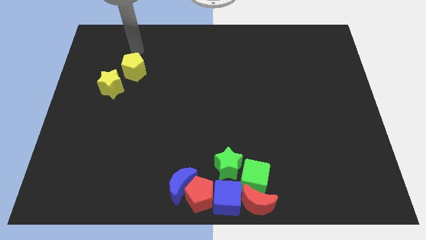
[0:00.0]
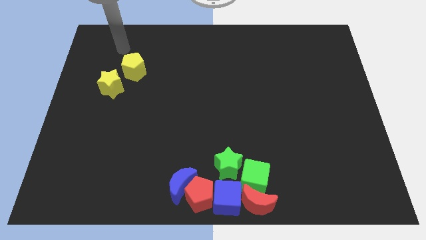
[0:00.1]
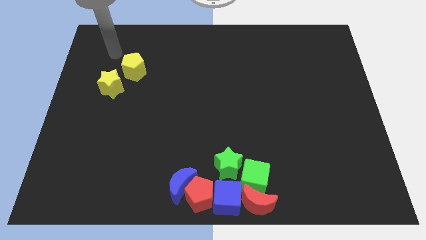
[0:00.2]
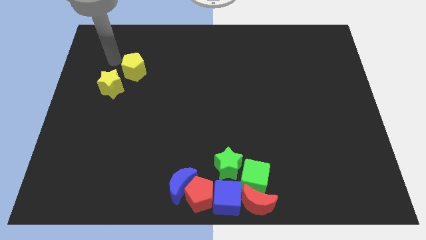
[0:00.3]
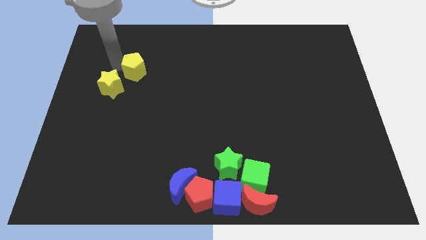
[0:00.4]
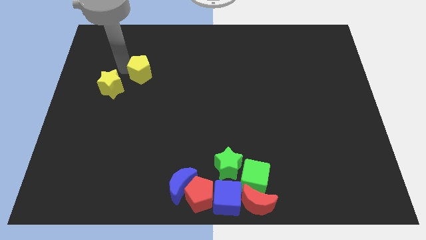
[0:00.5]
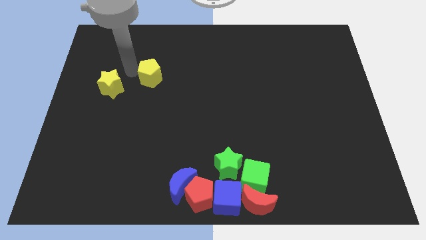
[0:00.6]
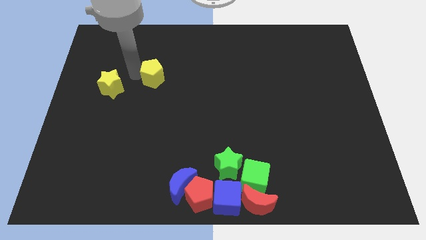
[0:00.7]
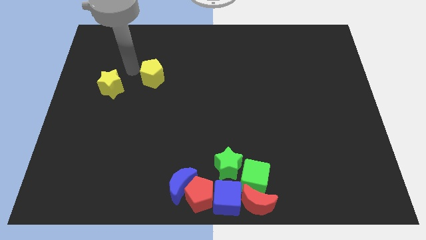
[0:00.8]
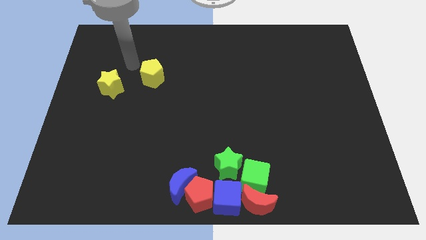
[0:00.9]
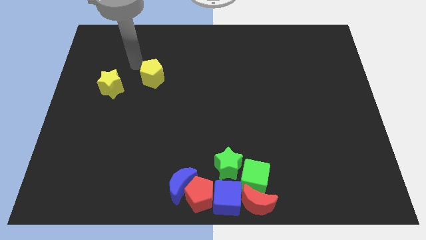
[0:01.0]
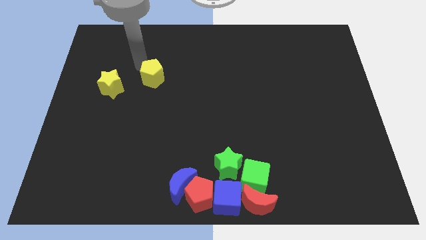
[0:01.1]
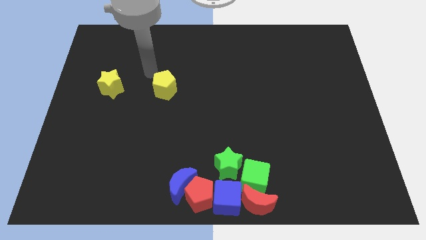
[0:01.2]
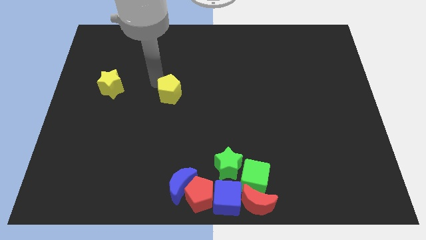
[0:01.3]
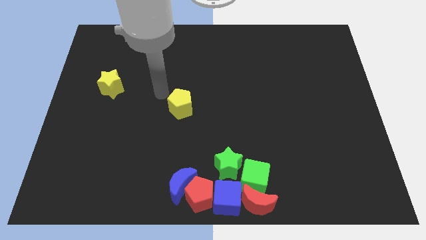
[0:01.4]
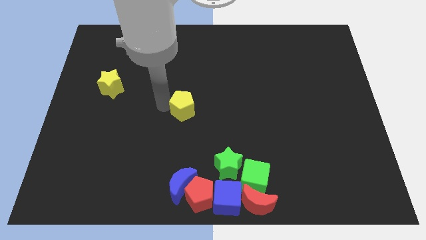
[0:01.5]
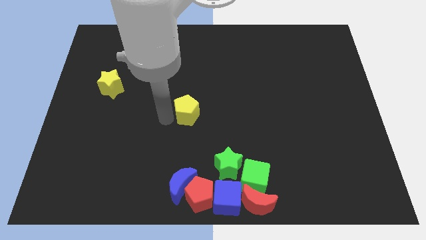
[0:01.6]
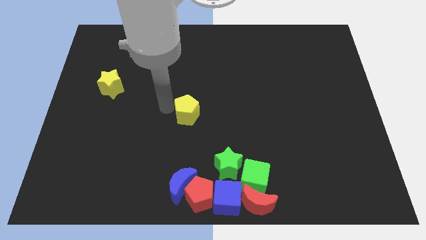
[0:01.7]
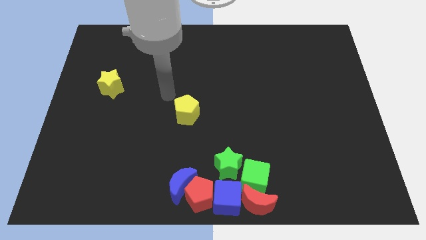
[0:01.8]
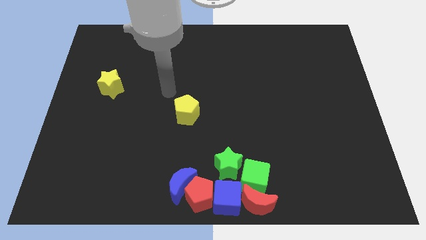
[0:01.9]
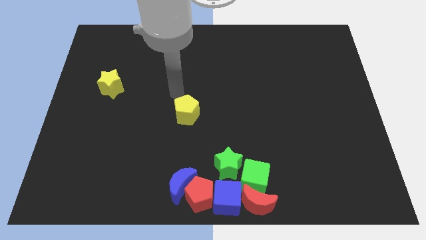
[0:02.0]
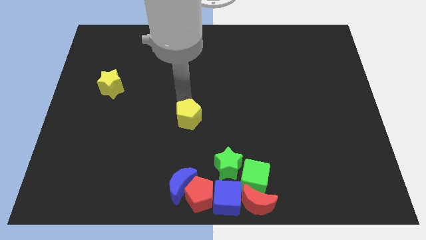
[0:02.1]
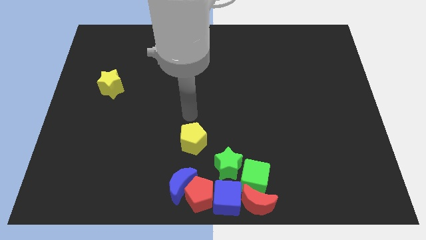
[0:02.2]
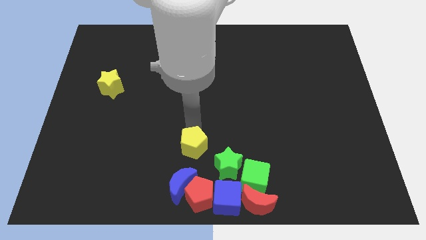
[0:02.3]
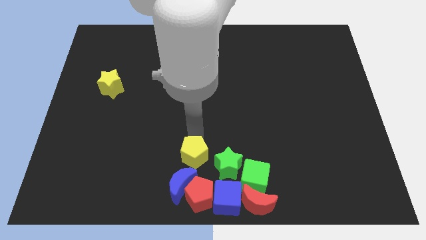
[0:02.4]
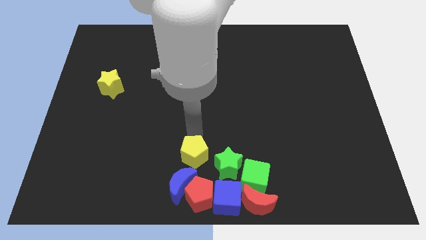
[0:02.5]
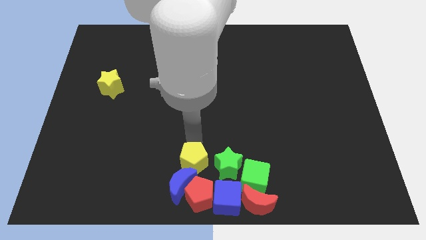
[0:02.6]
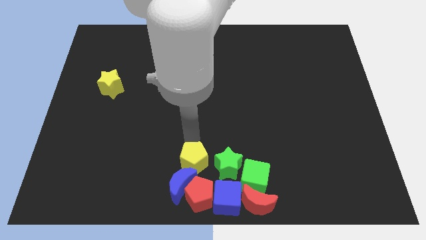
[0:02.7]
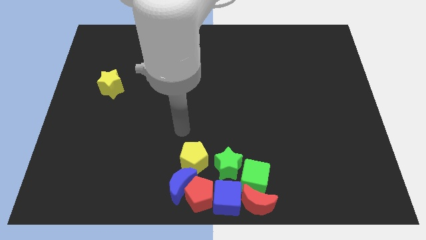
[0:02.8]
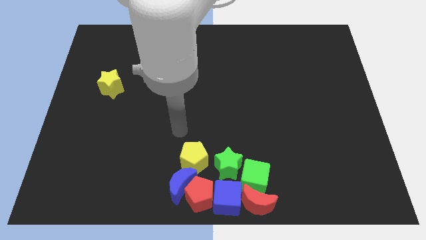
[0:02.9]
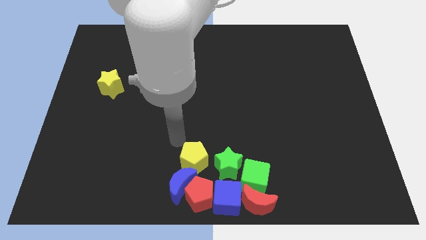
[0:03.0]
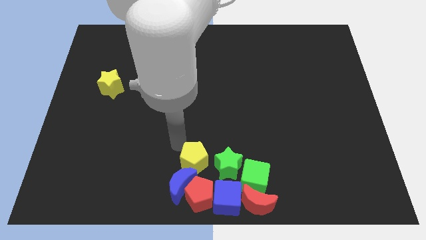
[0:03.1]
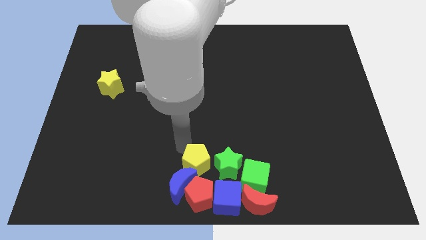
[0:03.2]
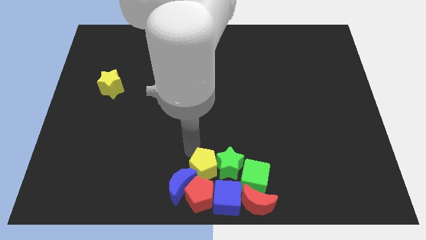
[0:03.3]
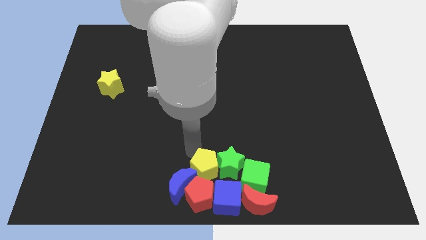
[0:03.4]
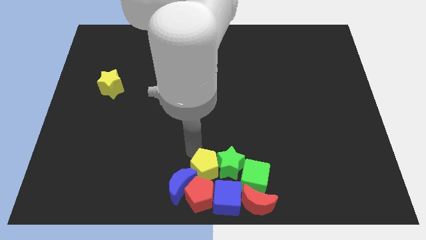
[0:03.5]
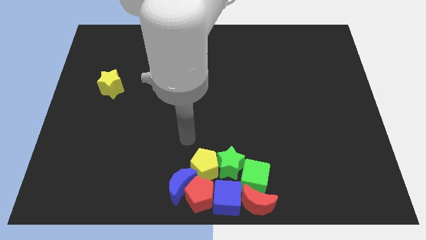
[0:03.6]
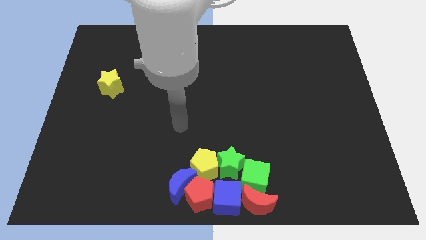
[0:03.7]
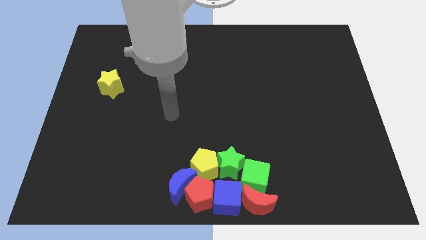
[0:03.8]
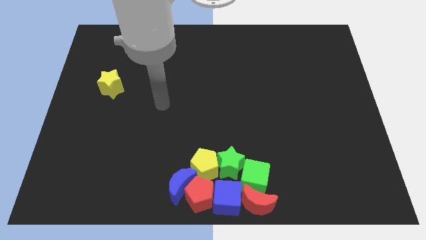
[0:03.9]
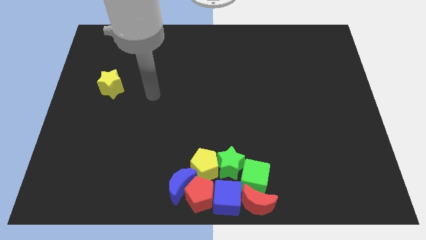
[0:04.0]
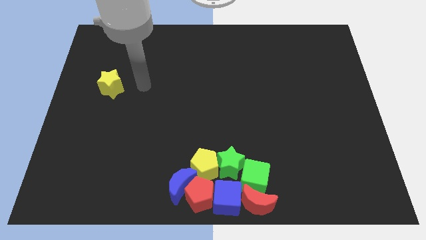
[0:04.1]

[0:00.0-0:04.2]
push the yellow pentagon between blue crescent and green star

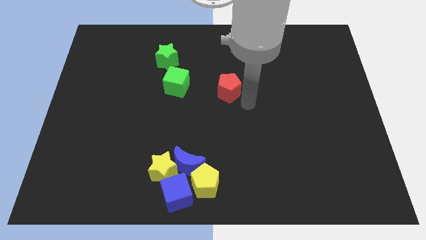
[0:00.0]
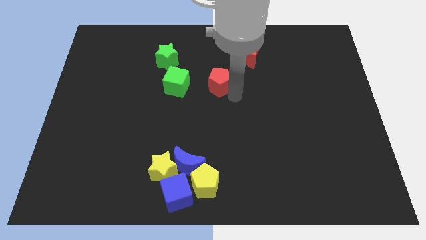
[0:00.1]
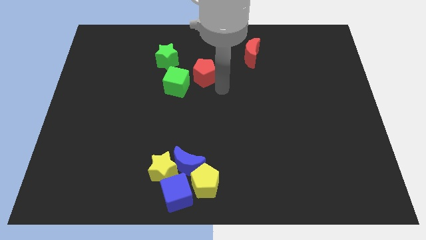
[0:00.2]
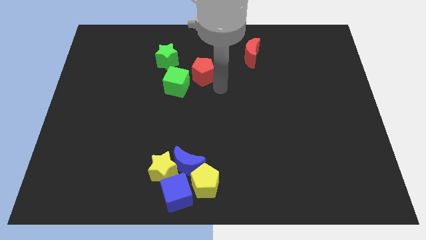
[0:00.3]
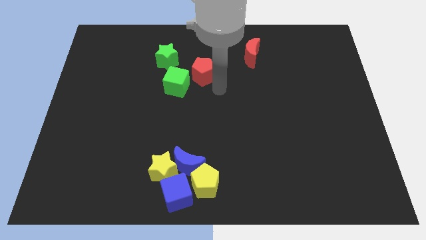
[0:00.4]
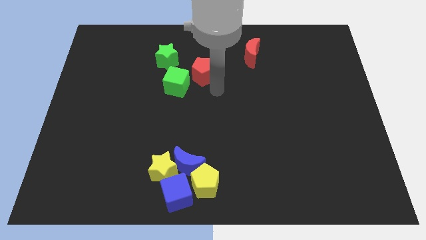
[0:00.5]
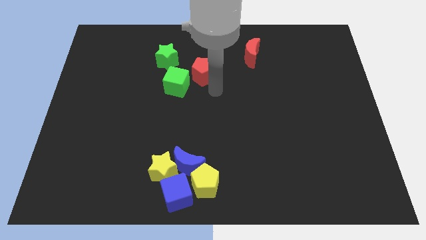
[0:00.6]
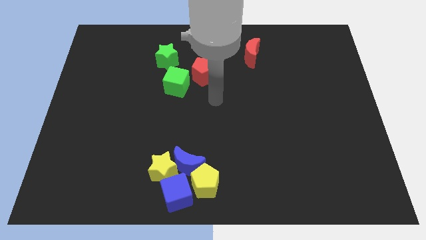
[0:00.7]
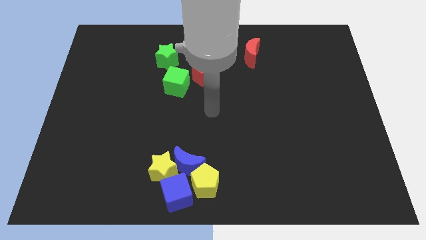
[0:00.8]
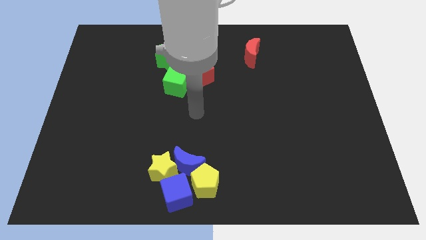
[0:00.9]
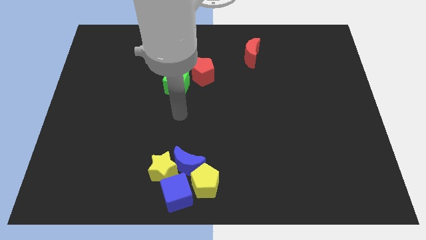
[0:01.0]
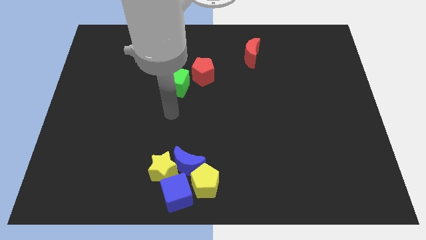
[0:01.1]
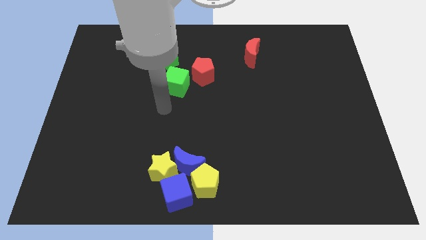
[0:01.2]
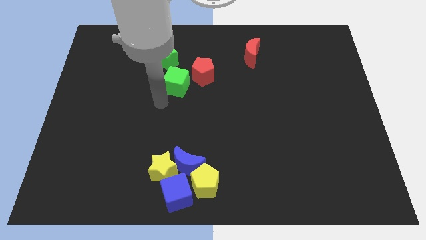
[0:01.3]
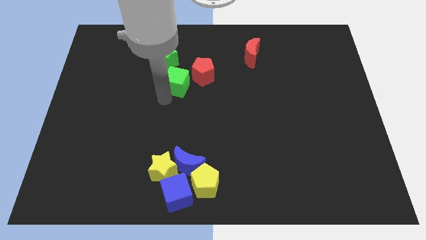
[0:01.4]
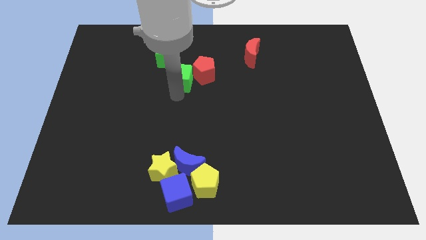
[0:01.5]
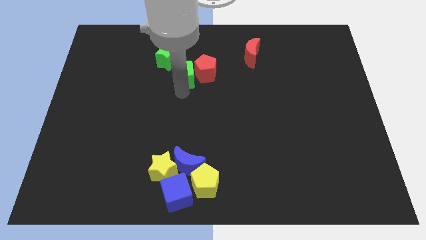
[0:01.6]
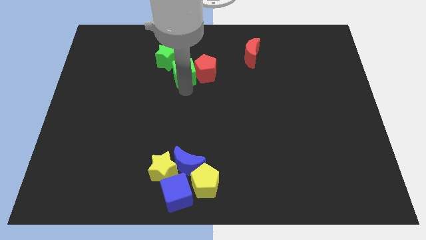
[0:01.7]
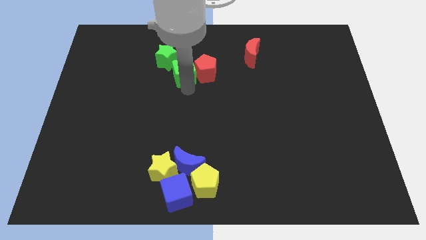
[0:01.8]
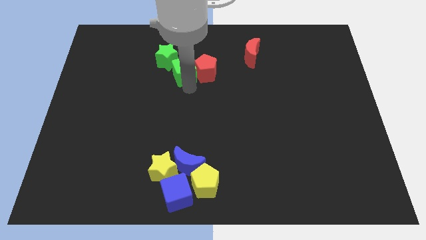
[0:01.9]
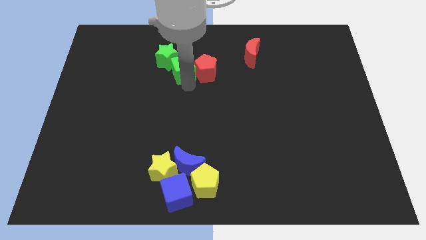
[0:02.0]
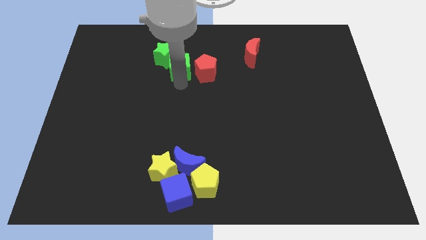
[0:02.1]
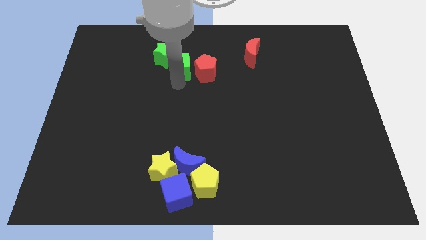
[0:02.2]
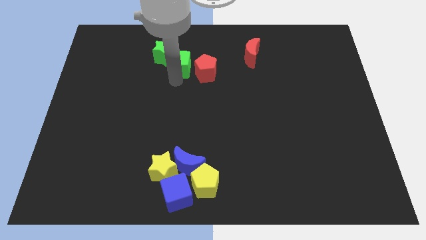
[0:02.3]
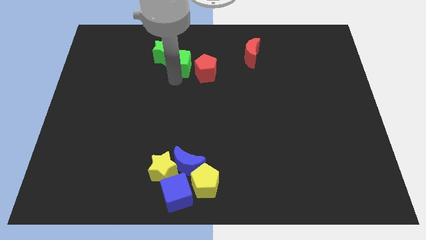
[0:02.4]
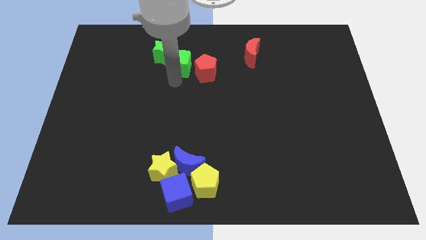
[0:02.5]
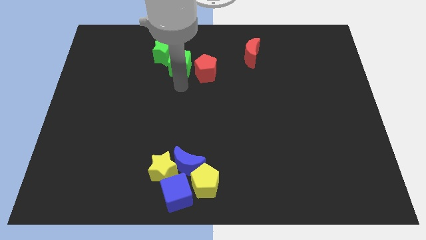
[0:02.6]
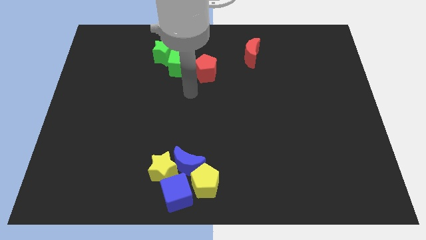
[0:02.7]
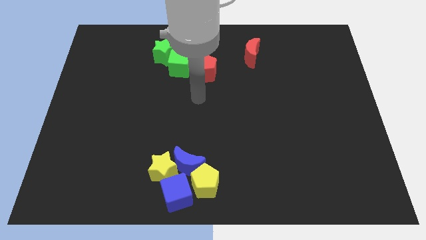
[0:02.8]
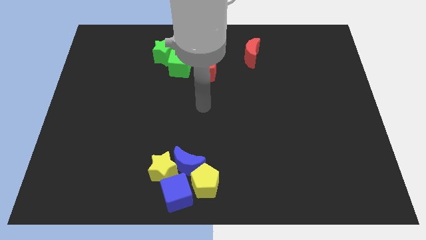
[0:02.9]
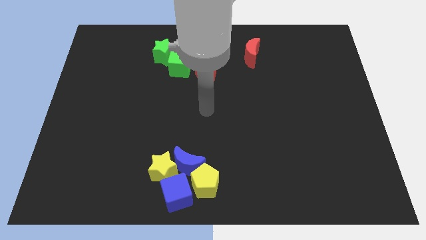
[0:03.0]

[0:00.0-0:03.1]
move the red pentagon and the green cube close to each other

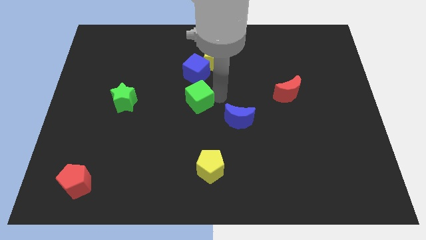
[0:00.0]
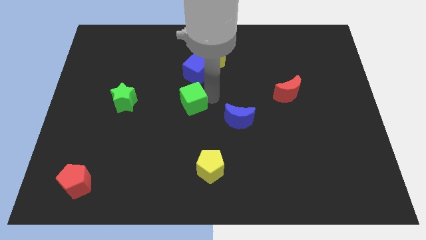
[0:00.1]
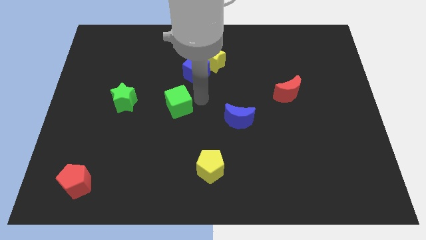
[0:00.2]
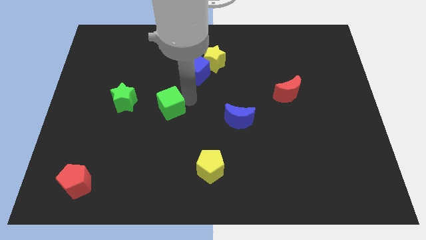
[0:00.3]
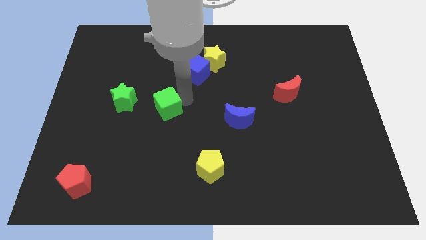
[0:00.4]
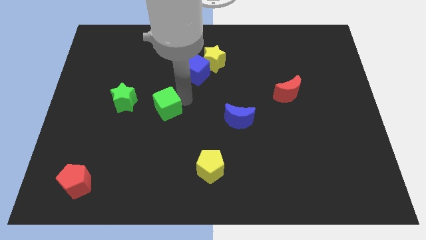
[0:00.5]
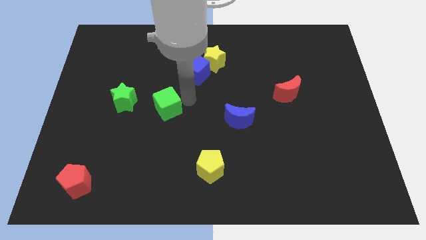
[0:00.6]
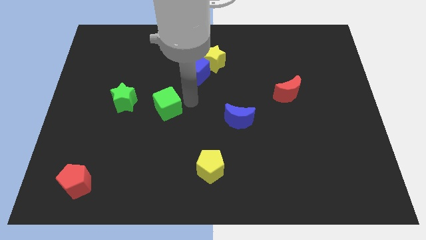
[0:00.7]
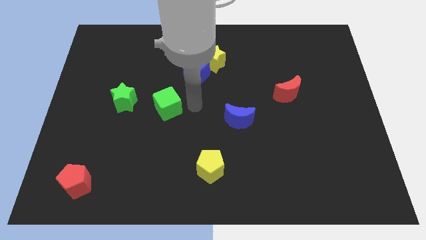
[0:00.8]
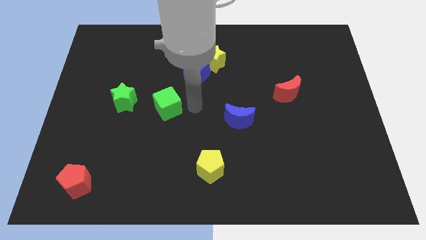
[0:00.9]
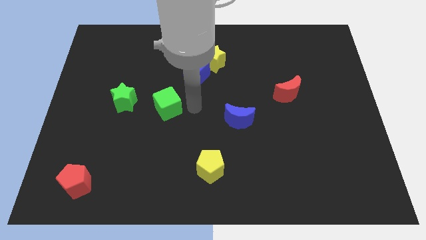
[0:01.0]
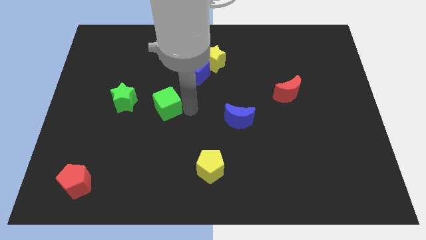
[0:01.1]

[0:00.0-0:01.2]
push the green cube slightly towards the green star

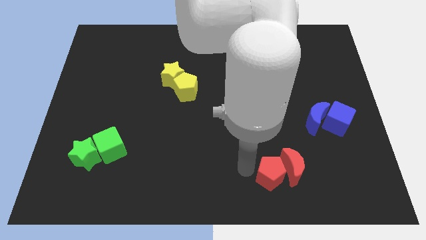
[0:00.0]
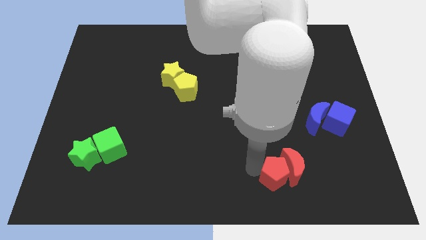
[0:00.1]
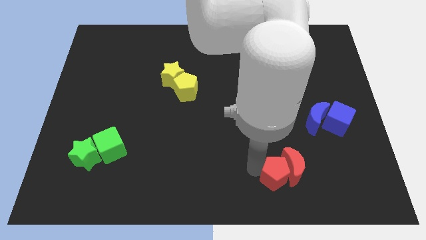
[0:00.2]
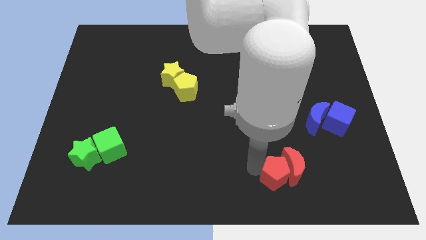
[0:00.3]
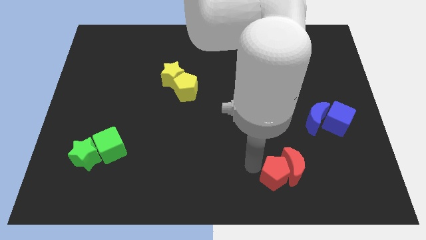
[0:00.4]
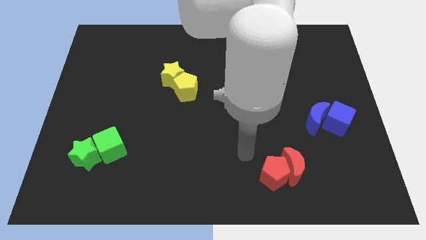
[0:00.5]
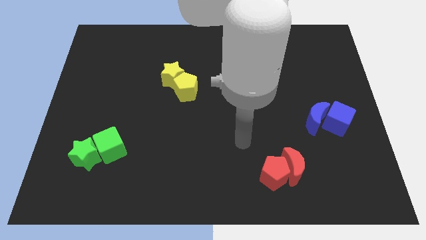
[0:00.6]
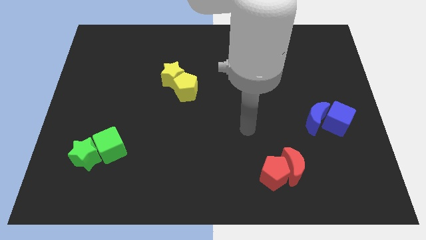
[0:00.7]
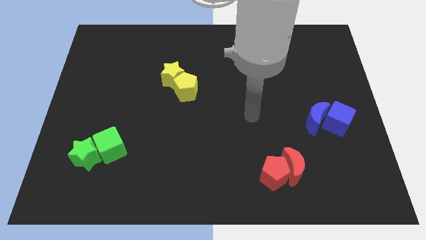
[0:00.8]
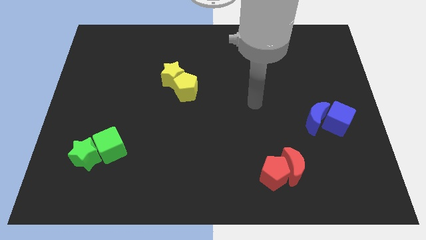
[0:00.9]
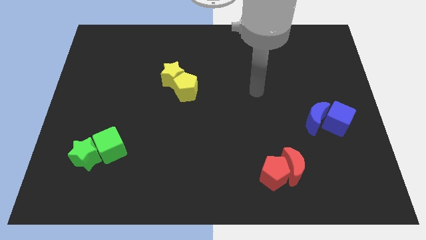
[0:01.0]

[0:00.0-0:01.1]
push the red pentagon into the red crescent
